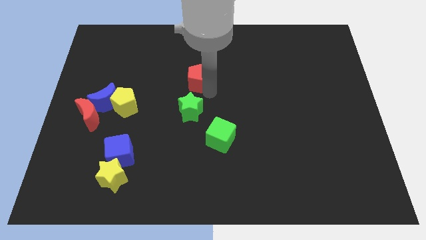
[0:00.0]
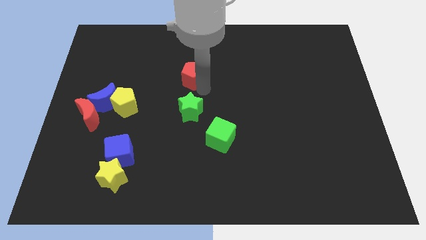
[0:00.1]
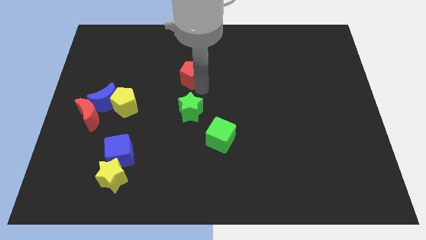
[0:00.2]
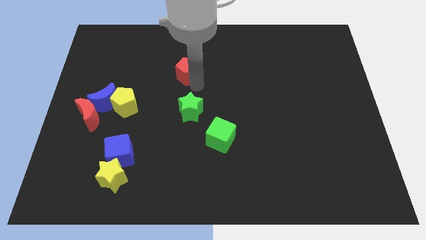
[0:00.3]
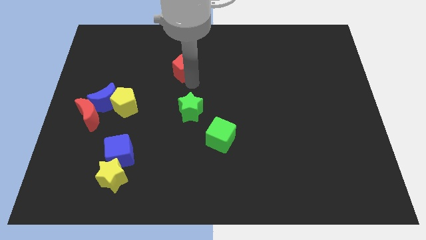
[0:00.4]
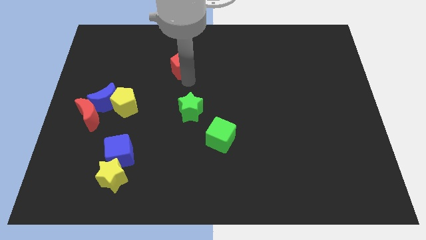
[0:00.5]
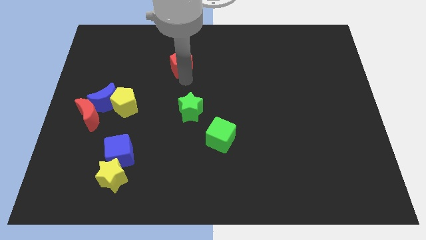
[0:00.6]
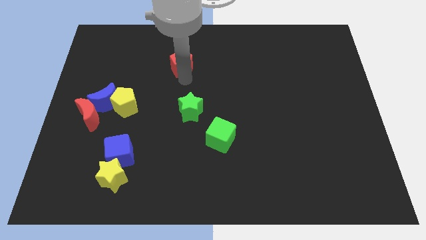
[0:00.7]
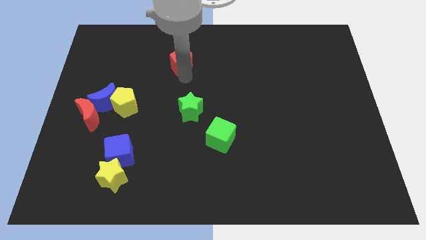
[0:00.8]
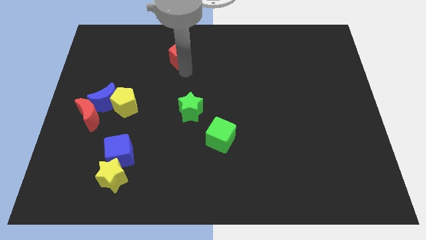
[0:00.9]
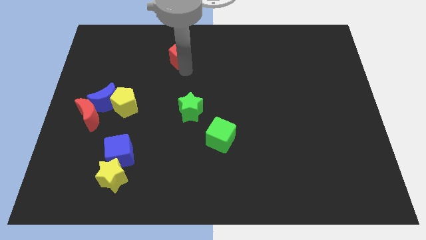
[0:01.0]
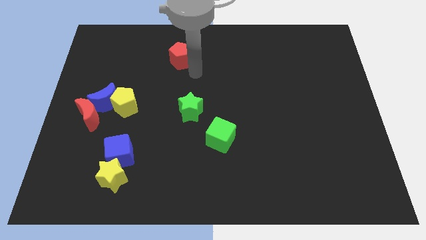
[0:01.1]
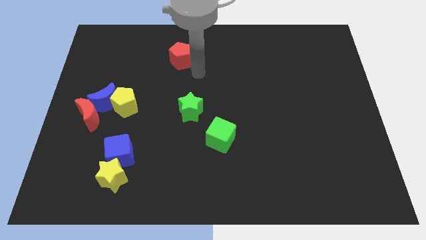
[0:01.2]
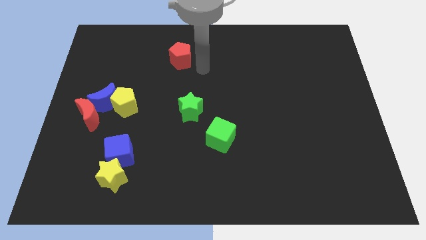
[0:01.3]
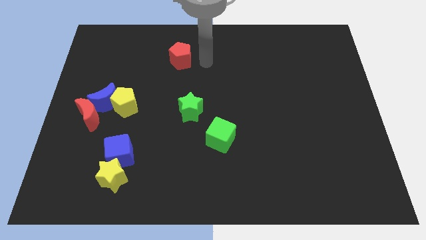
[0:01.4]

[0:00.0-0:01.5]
push the red pentagon towards the top center of the board

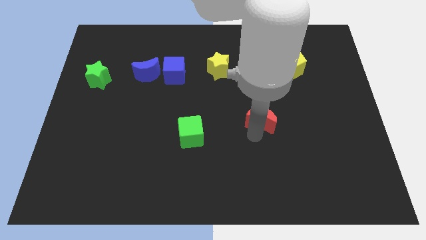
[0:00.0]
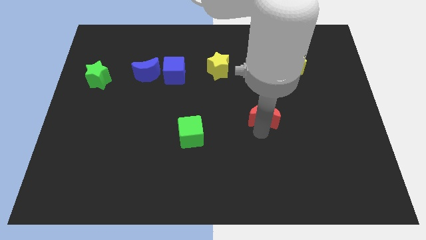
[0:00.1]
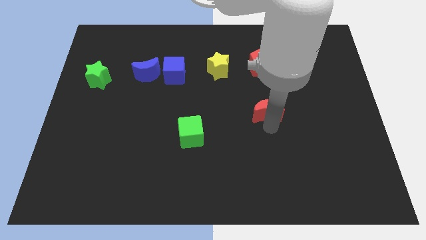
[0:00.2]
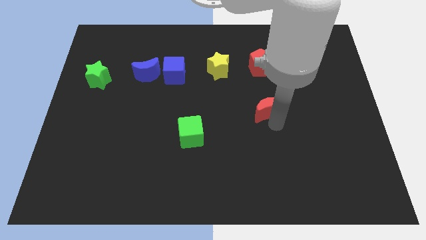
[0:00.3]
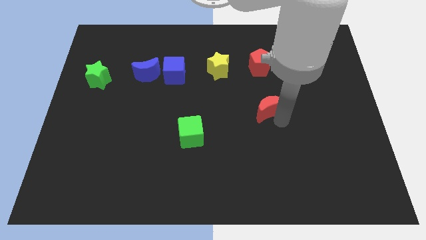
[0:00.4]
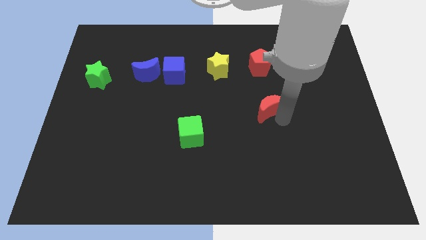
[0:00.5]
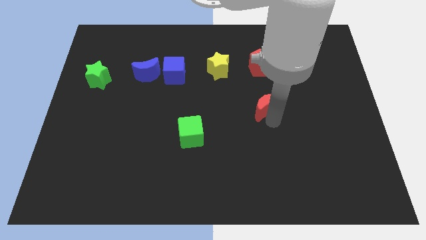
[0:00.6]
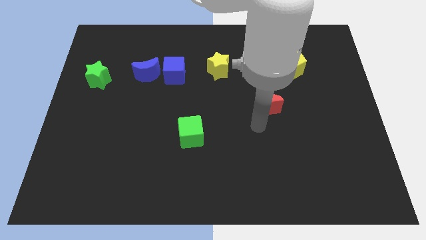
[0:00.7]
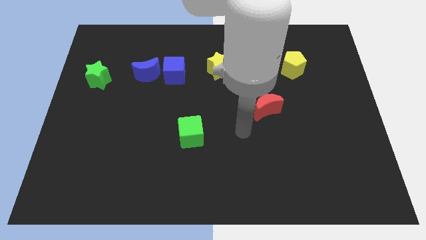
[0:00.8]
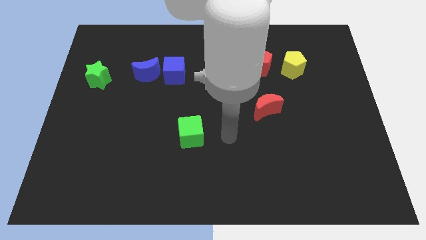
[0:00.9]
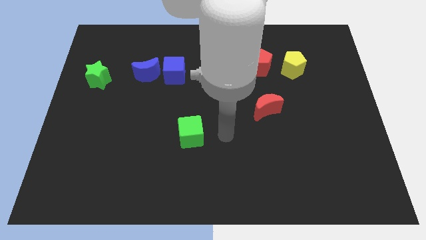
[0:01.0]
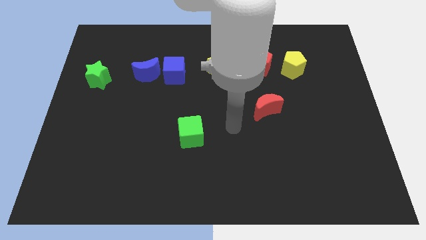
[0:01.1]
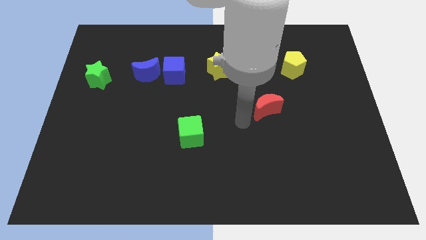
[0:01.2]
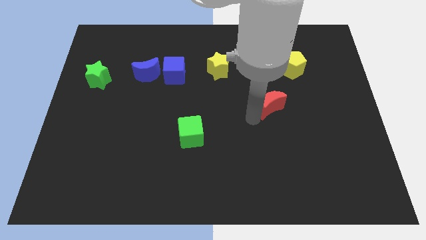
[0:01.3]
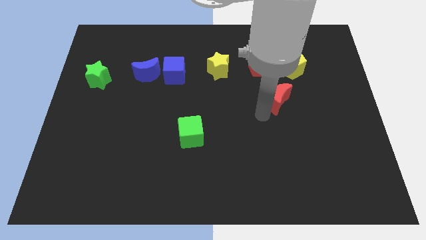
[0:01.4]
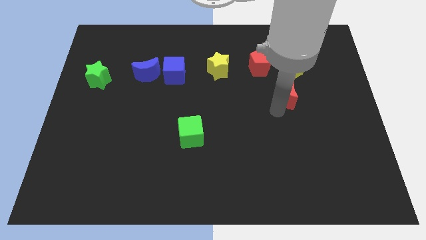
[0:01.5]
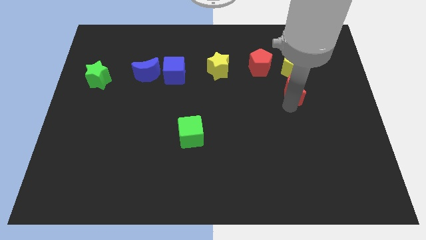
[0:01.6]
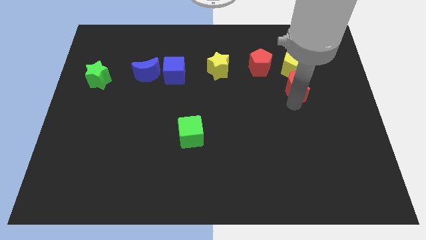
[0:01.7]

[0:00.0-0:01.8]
move the red crescent to the bottom side of the yellow pentagon

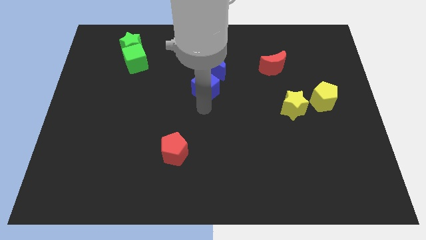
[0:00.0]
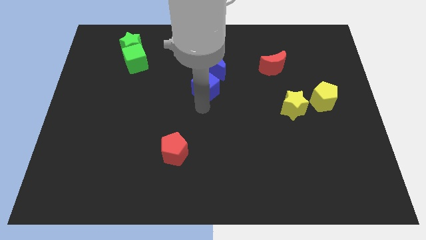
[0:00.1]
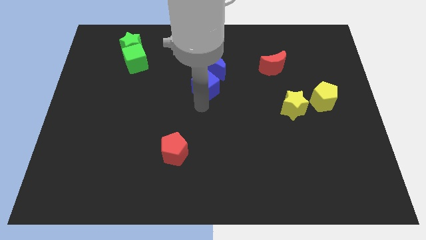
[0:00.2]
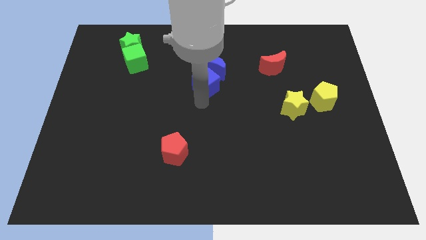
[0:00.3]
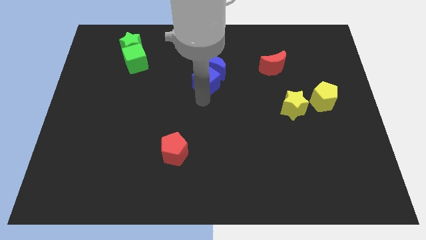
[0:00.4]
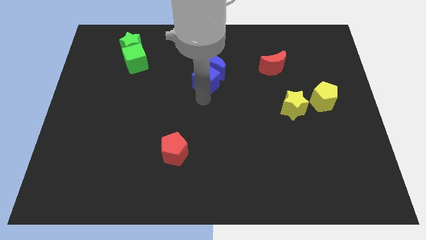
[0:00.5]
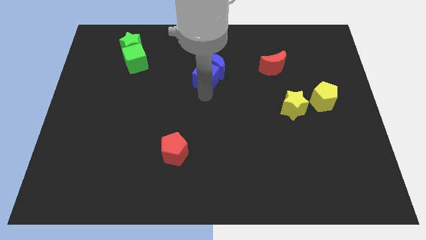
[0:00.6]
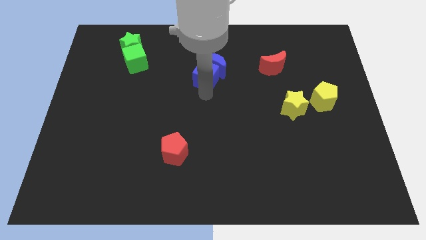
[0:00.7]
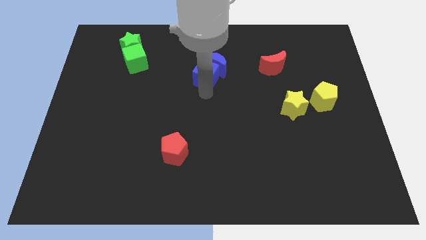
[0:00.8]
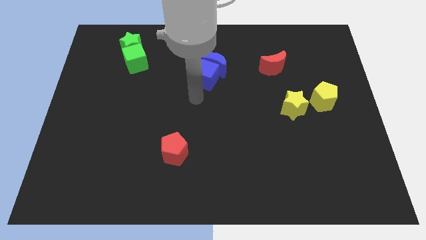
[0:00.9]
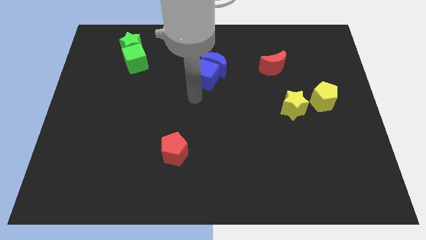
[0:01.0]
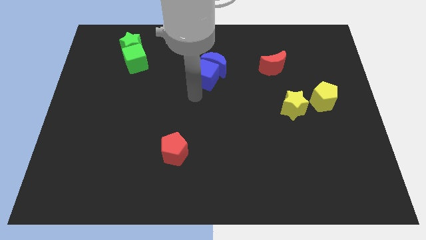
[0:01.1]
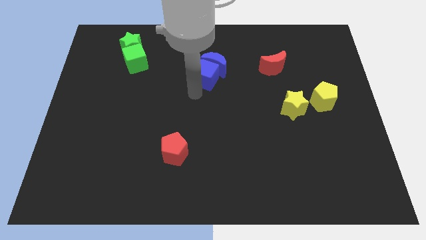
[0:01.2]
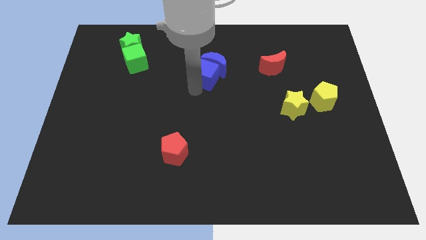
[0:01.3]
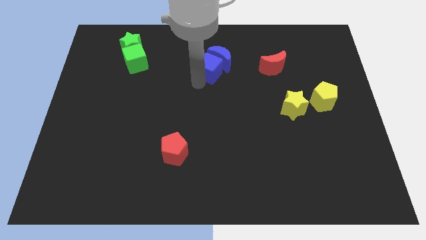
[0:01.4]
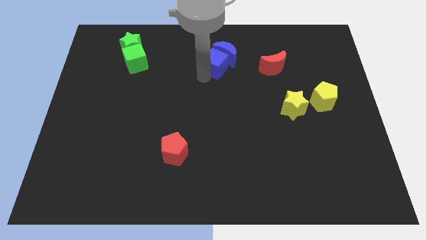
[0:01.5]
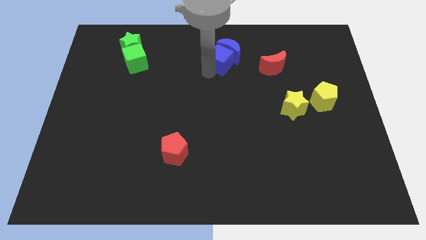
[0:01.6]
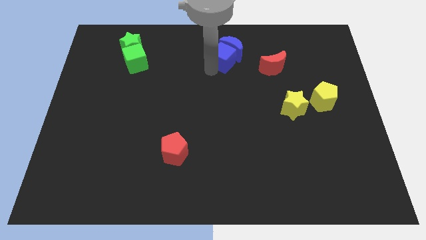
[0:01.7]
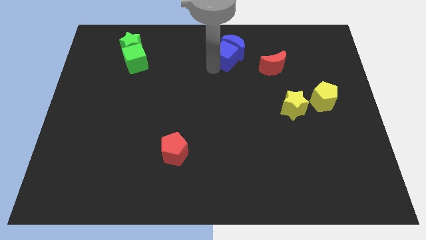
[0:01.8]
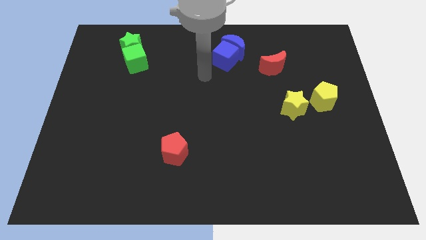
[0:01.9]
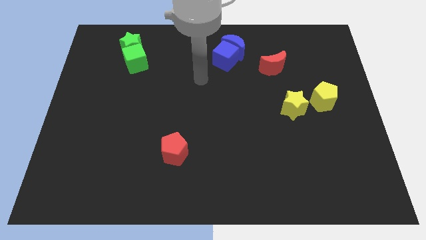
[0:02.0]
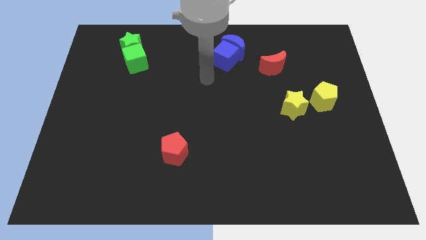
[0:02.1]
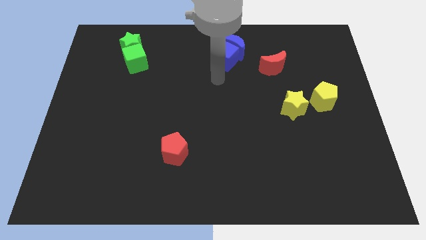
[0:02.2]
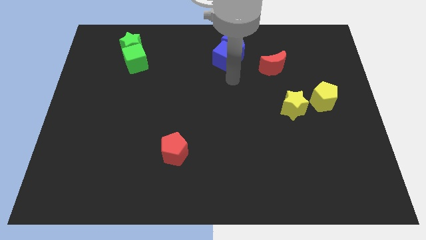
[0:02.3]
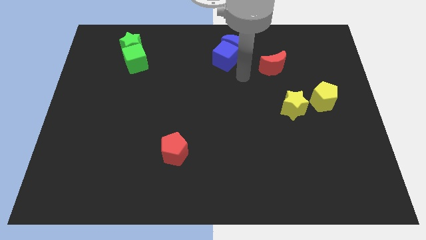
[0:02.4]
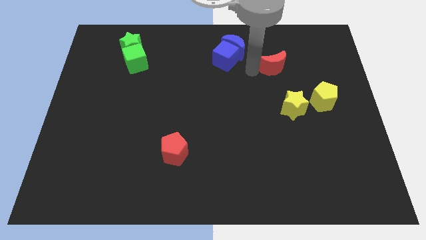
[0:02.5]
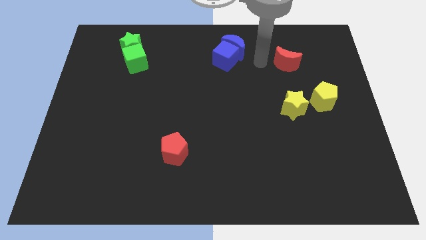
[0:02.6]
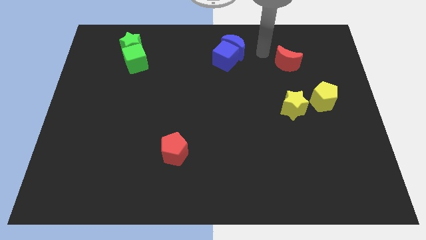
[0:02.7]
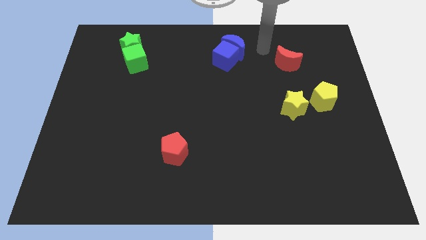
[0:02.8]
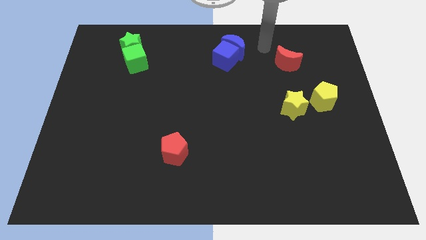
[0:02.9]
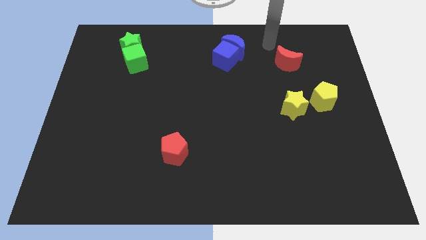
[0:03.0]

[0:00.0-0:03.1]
push red crescent above yellow star

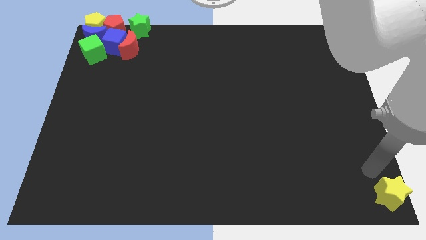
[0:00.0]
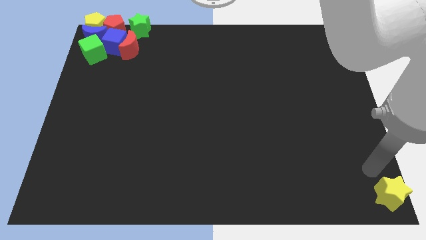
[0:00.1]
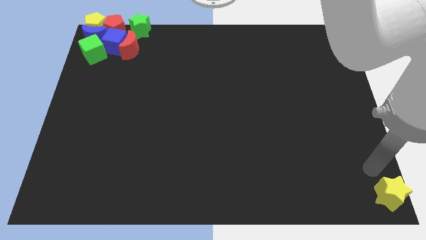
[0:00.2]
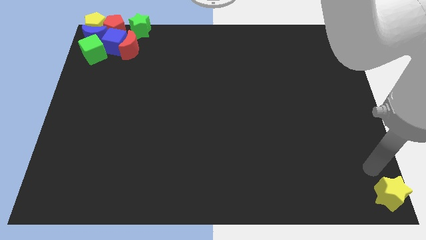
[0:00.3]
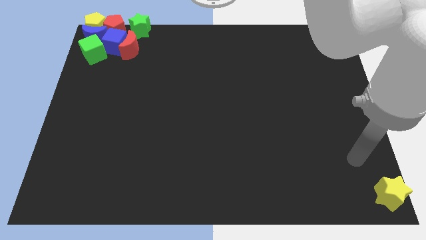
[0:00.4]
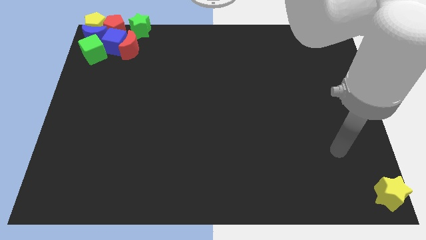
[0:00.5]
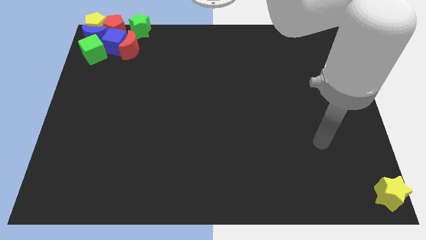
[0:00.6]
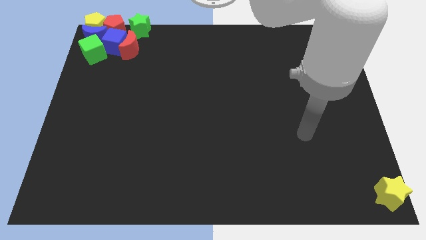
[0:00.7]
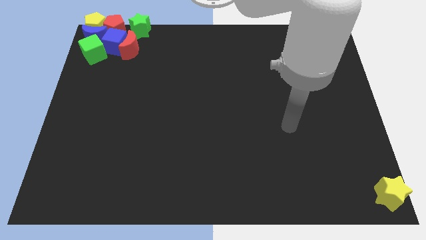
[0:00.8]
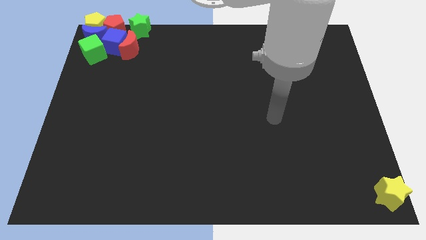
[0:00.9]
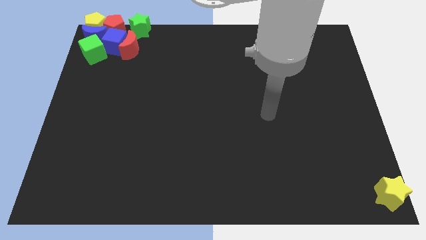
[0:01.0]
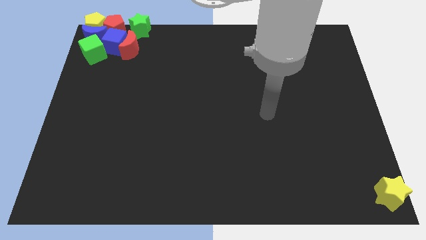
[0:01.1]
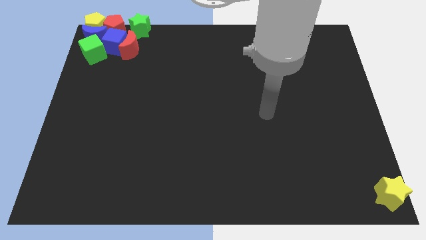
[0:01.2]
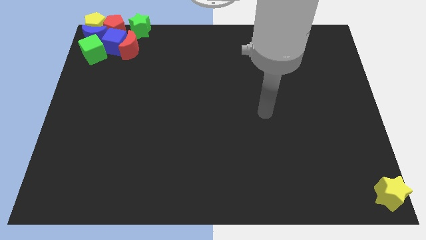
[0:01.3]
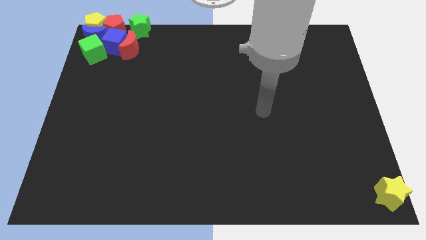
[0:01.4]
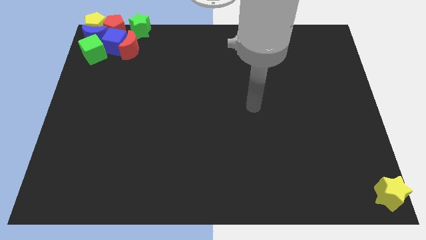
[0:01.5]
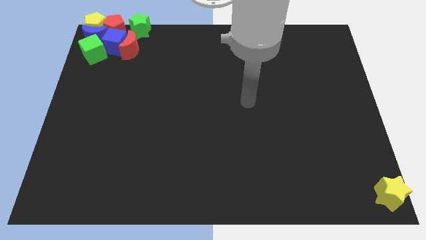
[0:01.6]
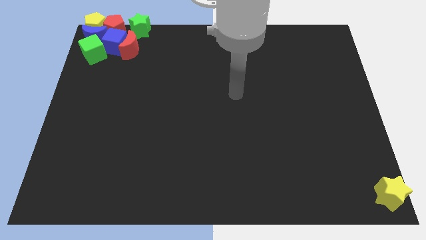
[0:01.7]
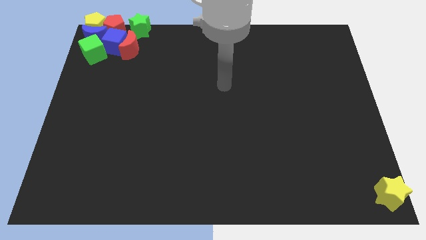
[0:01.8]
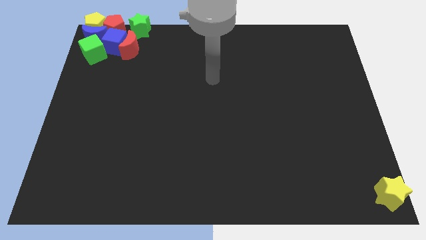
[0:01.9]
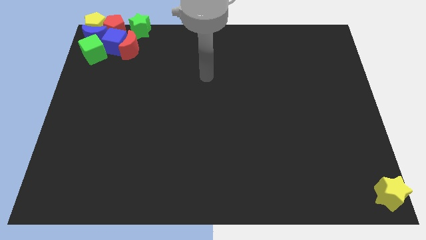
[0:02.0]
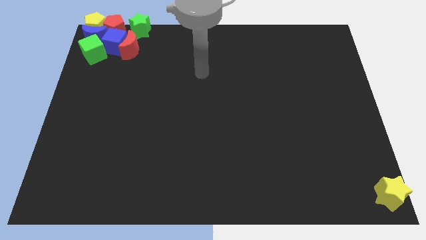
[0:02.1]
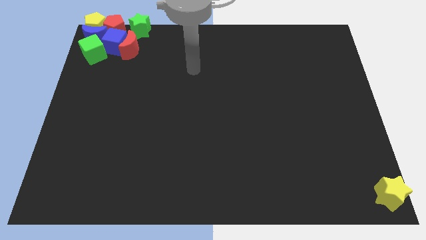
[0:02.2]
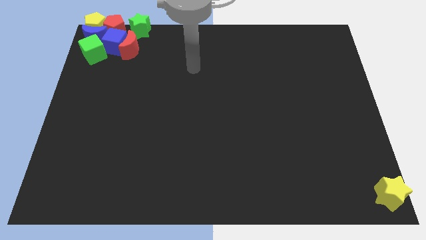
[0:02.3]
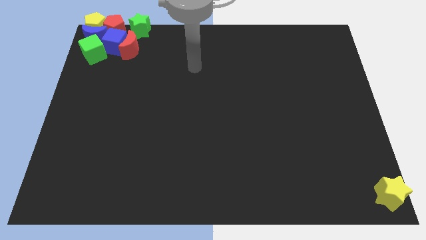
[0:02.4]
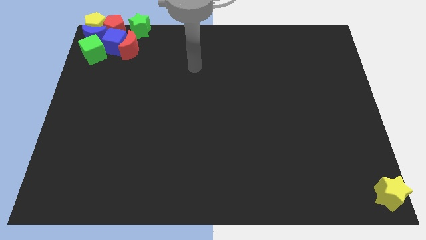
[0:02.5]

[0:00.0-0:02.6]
move your arm towards top
